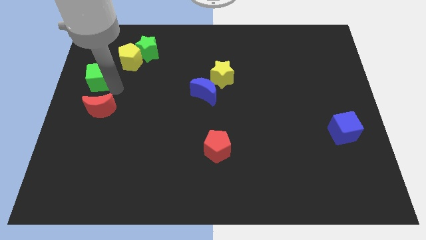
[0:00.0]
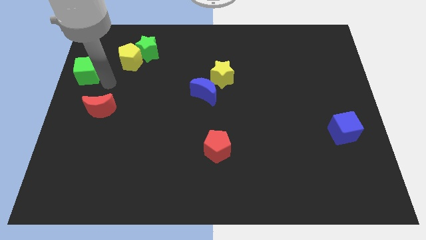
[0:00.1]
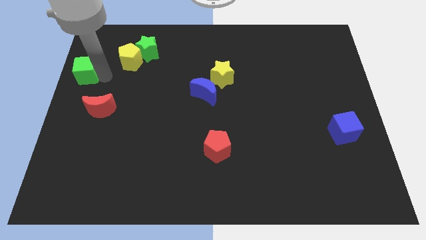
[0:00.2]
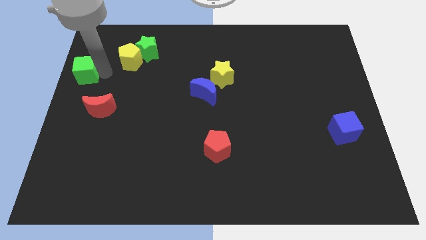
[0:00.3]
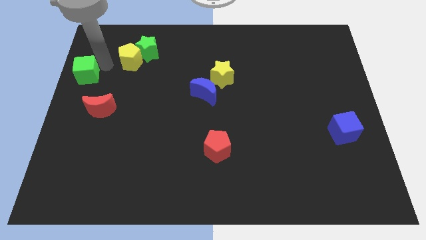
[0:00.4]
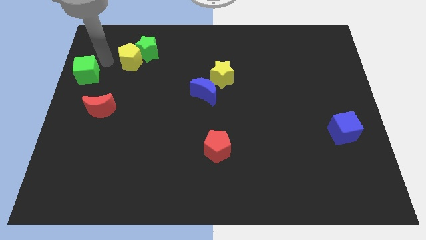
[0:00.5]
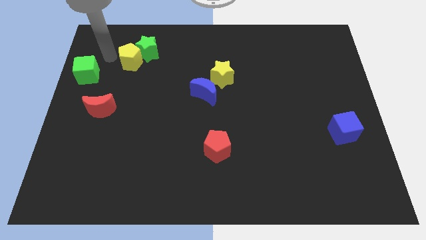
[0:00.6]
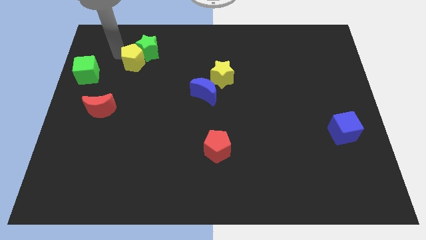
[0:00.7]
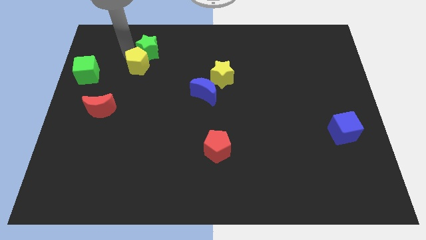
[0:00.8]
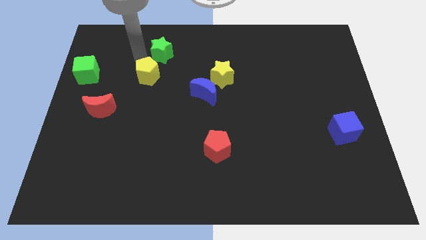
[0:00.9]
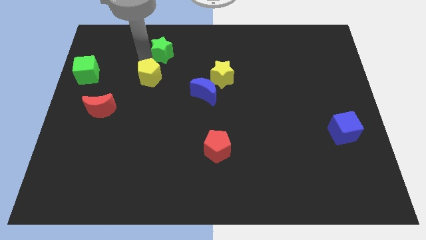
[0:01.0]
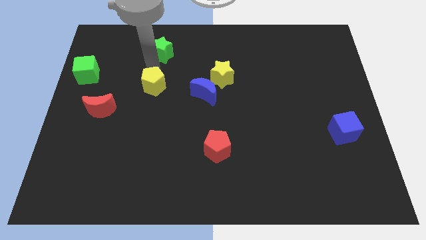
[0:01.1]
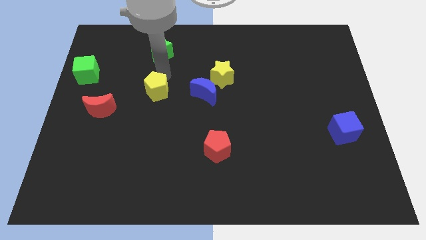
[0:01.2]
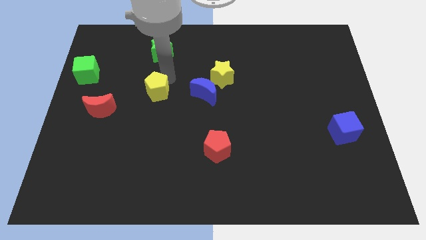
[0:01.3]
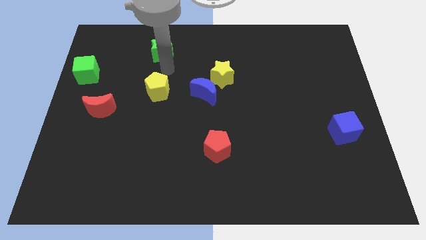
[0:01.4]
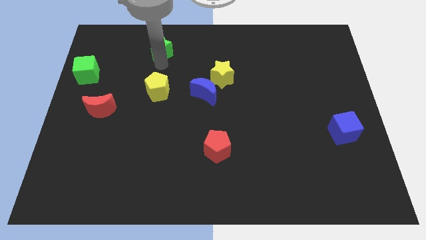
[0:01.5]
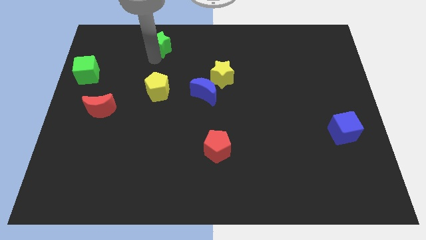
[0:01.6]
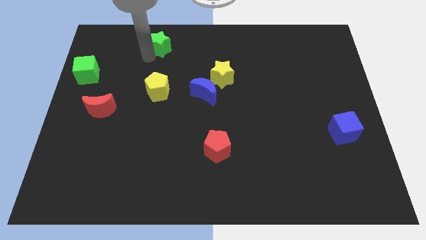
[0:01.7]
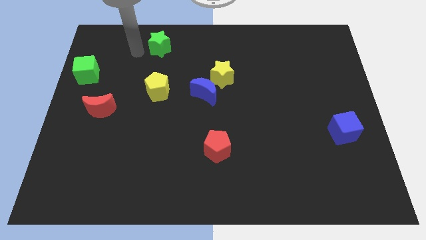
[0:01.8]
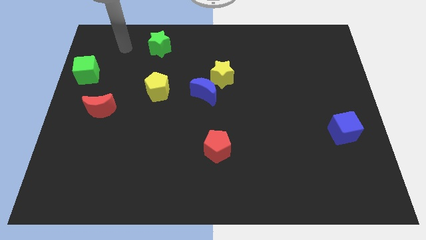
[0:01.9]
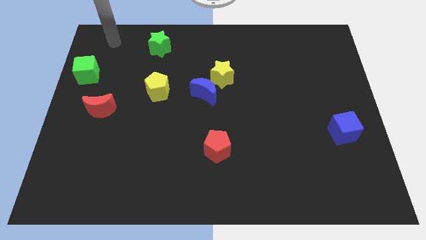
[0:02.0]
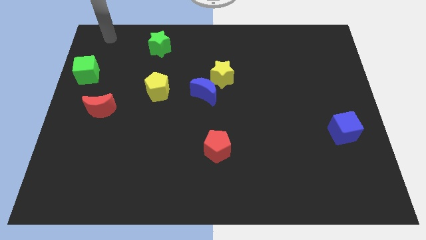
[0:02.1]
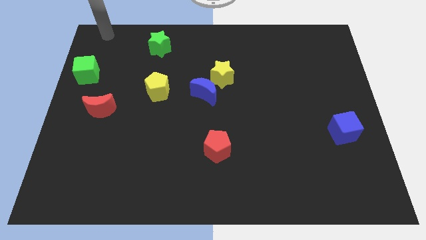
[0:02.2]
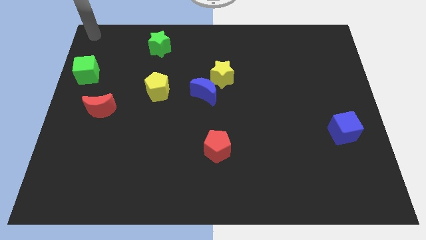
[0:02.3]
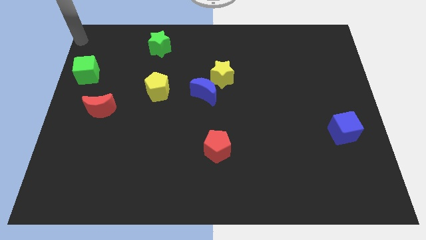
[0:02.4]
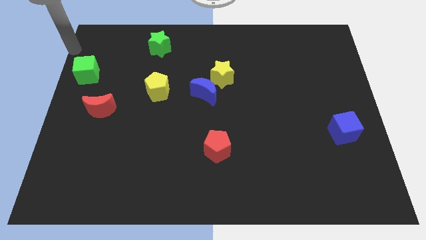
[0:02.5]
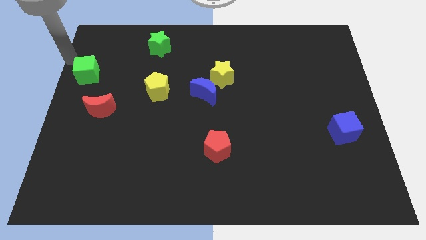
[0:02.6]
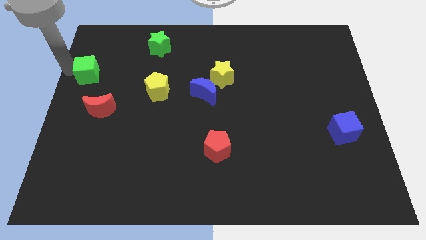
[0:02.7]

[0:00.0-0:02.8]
place the yellow pentagon in between the blue moon and red moon

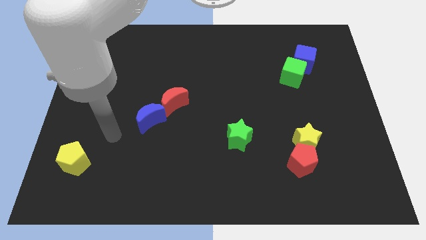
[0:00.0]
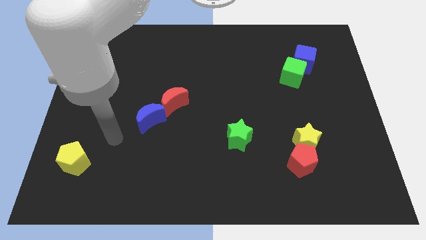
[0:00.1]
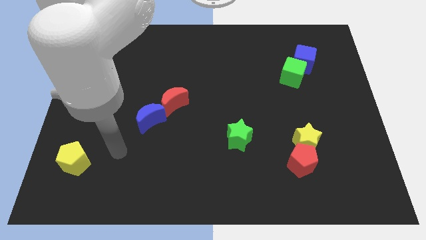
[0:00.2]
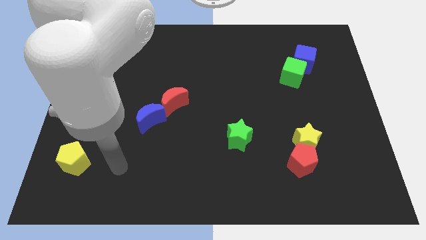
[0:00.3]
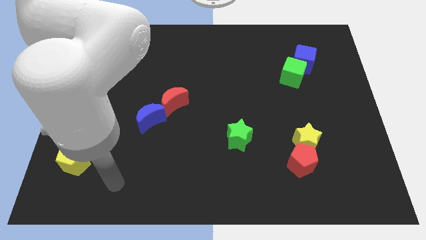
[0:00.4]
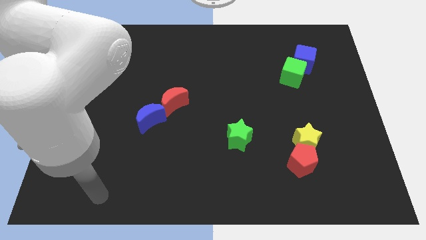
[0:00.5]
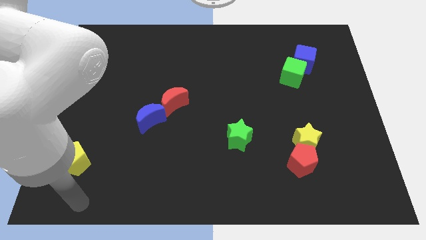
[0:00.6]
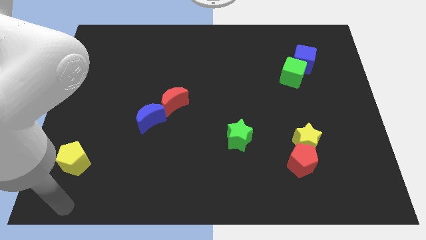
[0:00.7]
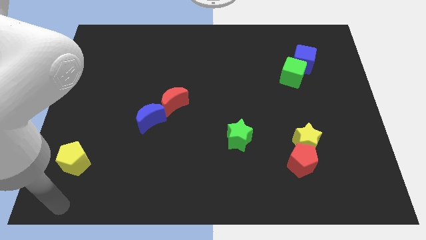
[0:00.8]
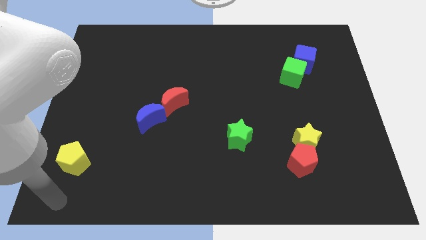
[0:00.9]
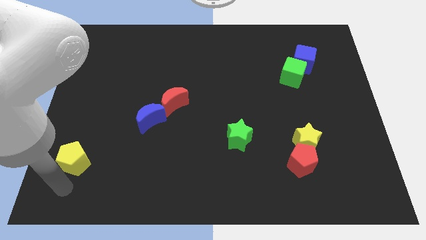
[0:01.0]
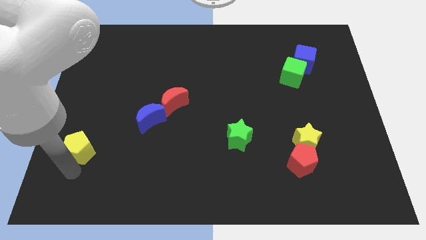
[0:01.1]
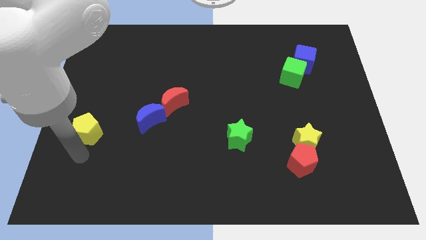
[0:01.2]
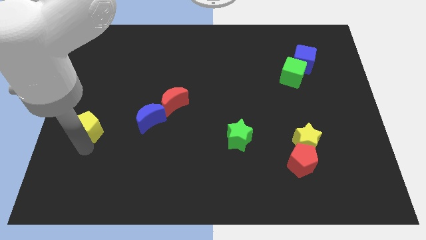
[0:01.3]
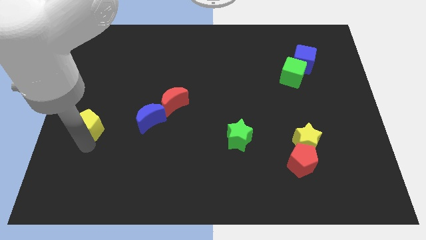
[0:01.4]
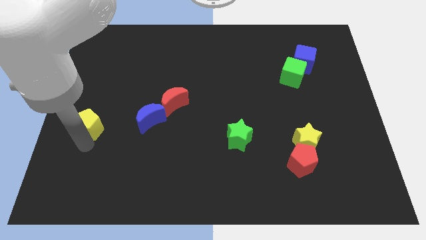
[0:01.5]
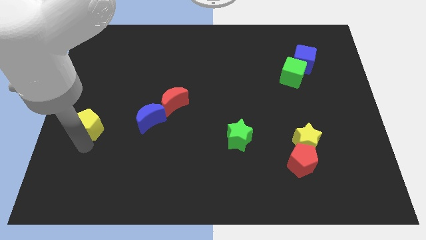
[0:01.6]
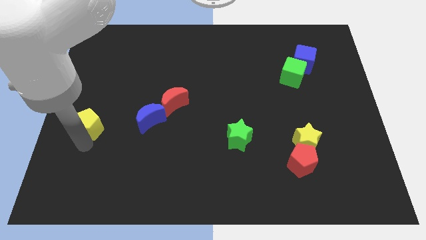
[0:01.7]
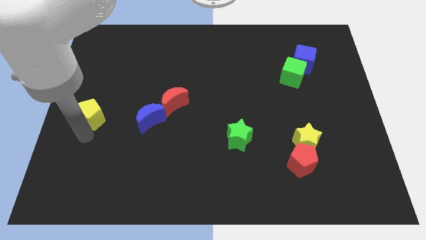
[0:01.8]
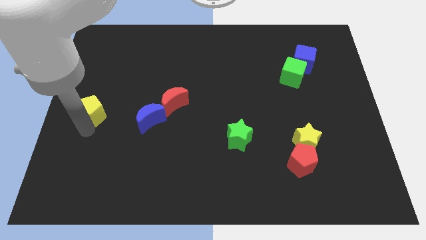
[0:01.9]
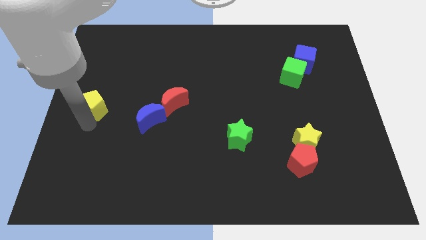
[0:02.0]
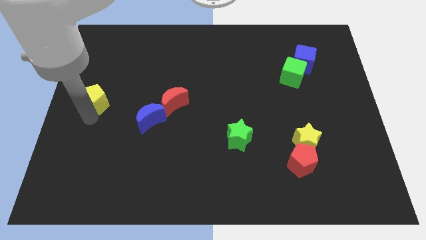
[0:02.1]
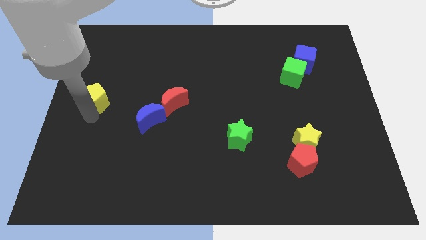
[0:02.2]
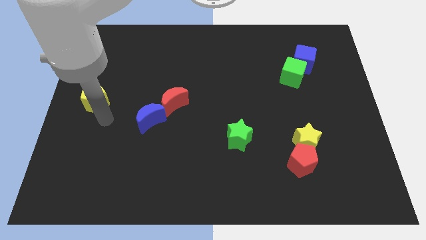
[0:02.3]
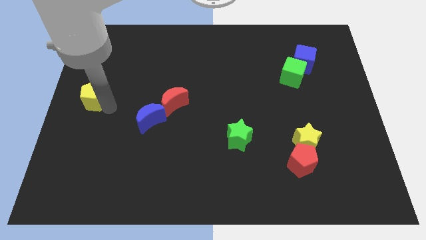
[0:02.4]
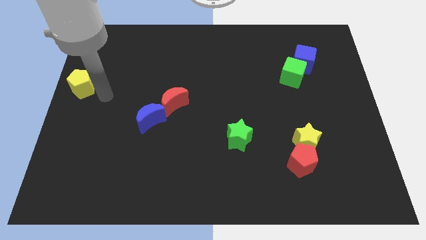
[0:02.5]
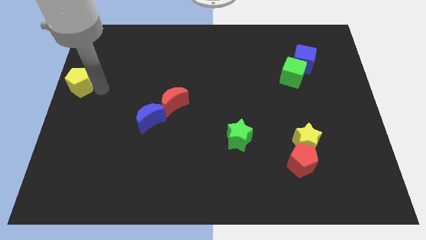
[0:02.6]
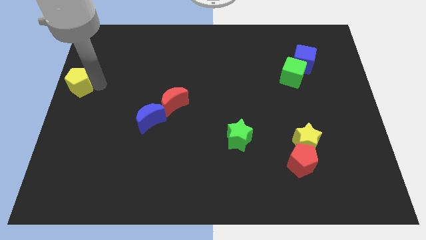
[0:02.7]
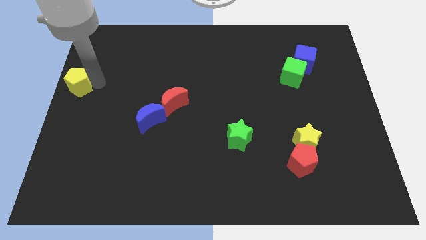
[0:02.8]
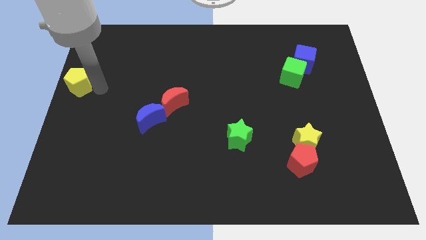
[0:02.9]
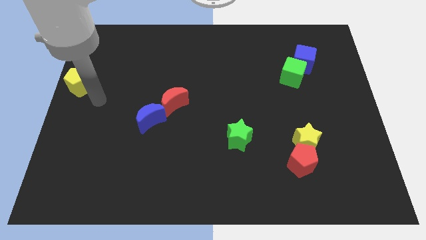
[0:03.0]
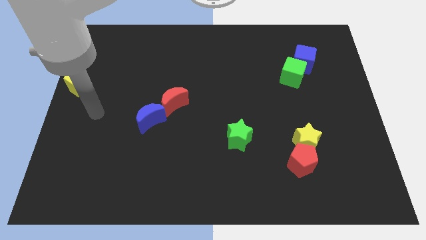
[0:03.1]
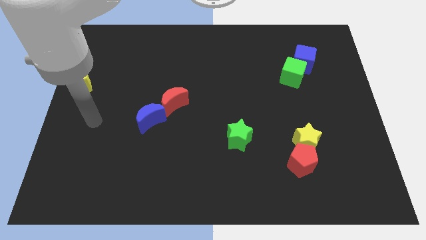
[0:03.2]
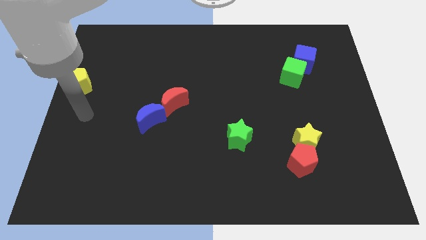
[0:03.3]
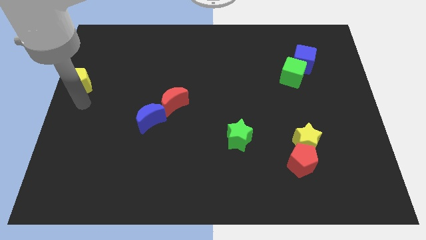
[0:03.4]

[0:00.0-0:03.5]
slide the yellow pentagon diagonally top left to the blue moon

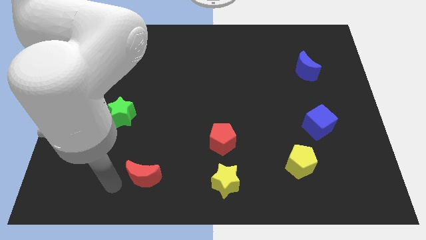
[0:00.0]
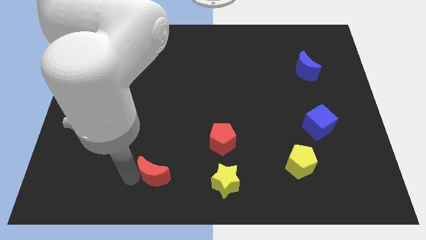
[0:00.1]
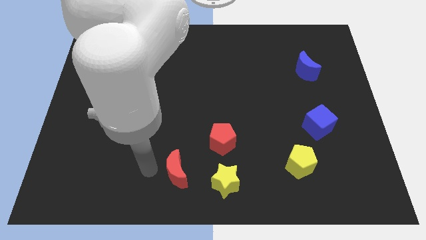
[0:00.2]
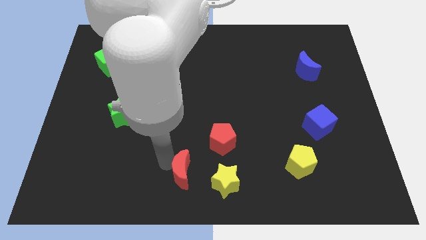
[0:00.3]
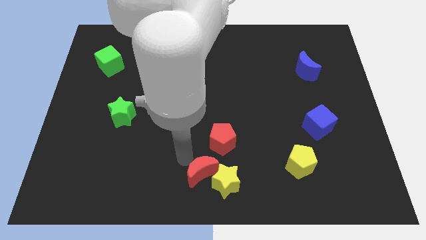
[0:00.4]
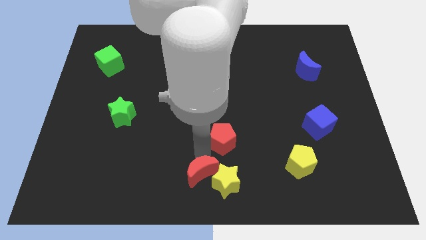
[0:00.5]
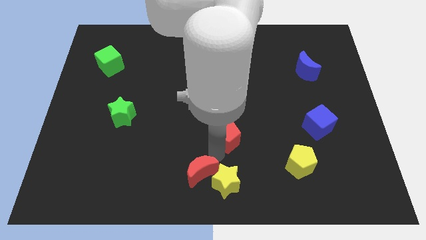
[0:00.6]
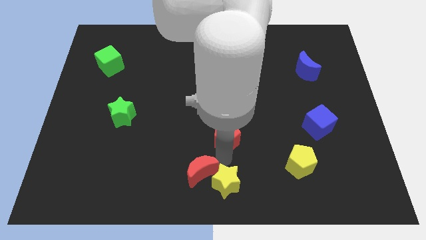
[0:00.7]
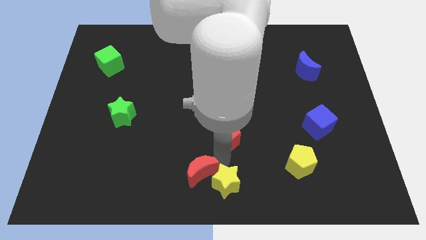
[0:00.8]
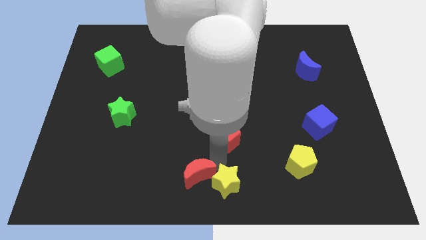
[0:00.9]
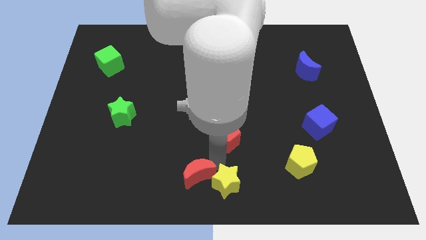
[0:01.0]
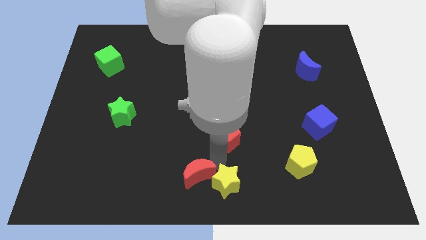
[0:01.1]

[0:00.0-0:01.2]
push the red moon into the yellow star

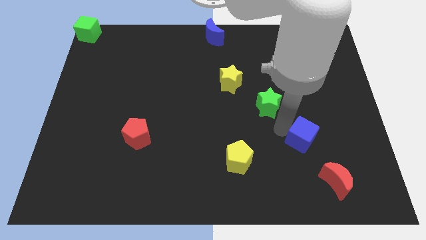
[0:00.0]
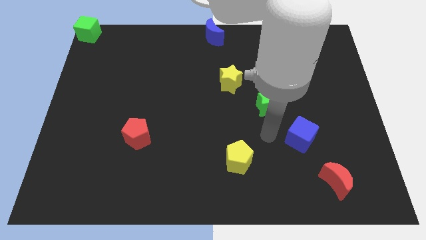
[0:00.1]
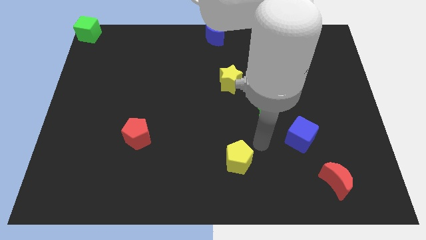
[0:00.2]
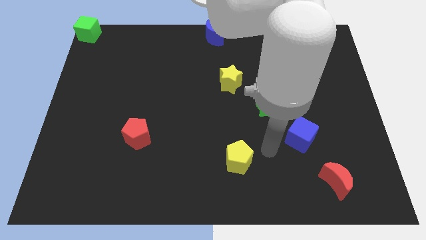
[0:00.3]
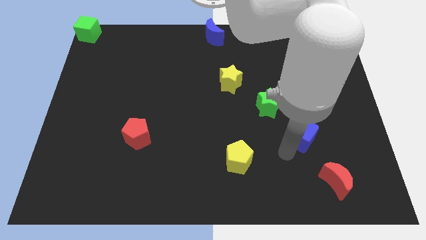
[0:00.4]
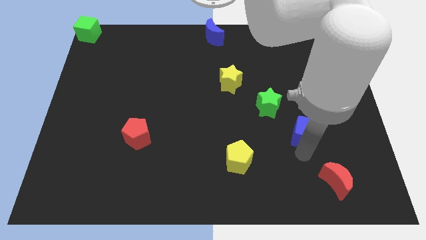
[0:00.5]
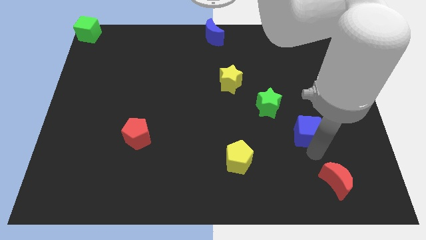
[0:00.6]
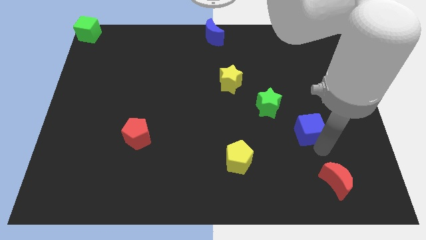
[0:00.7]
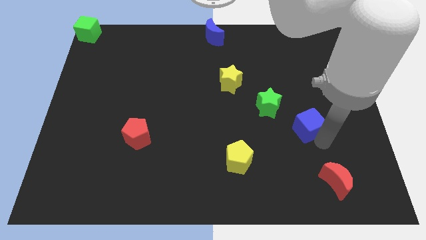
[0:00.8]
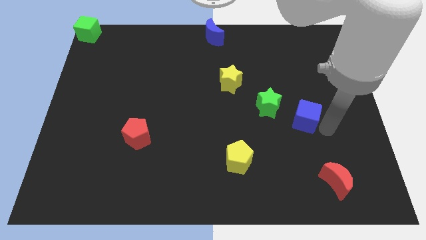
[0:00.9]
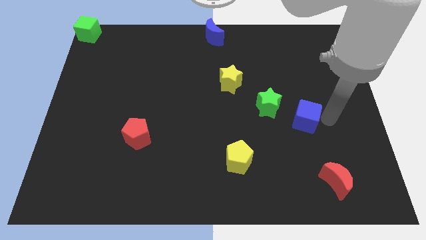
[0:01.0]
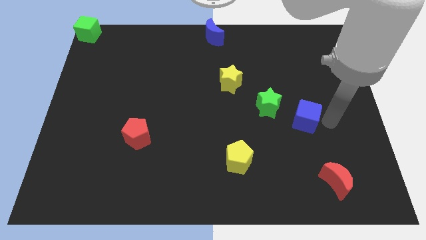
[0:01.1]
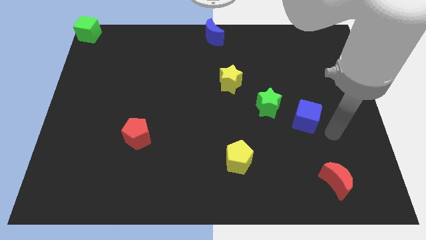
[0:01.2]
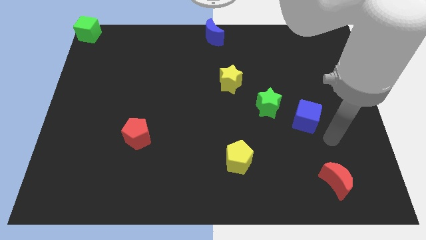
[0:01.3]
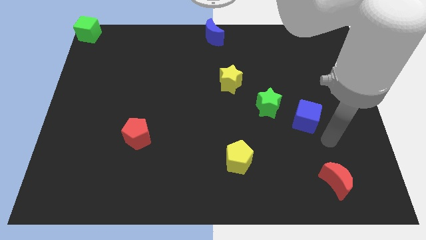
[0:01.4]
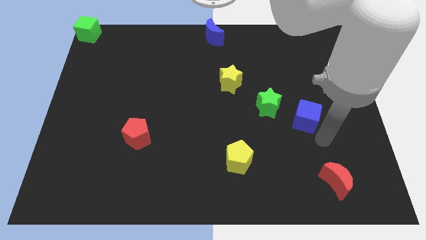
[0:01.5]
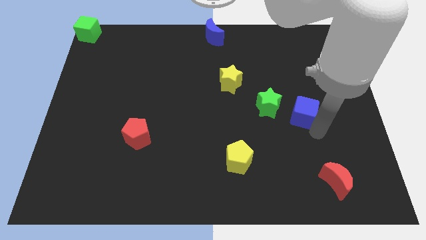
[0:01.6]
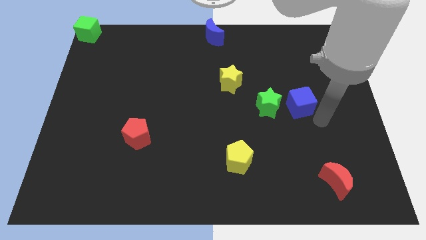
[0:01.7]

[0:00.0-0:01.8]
push the blue cube to the right of the green star
